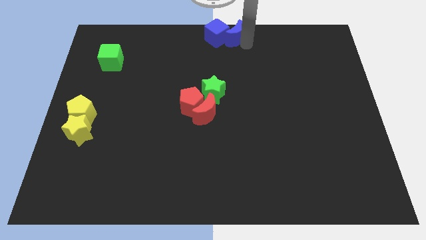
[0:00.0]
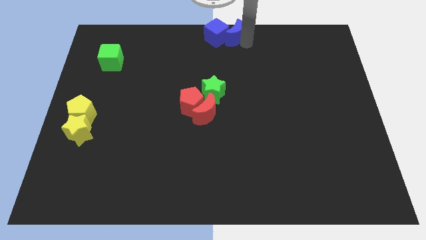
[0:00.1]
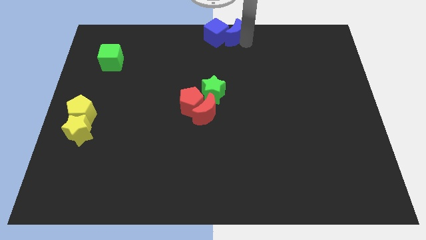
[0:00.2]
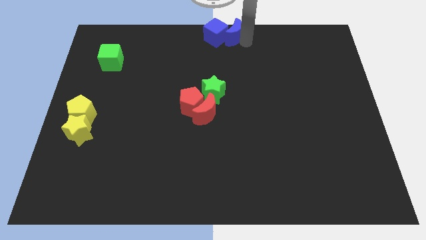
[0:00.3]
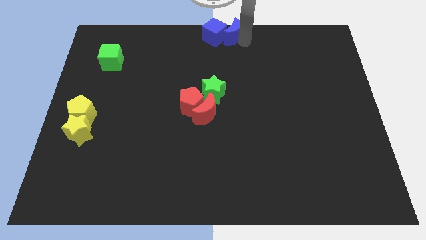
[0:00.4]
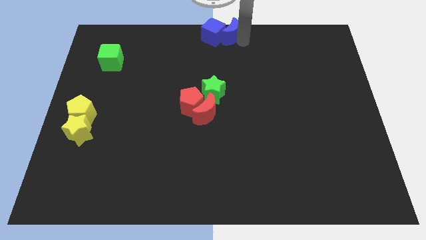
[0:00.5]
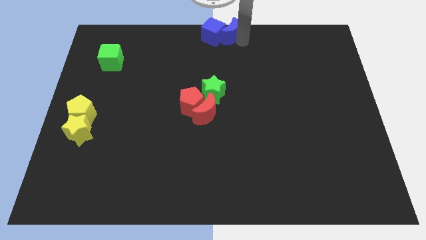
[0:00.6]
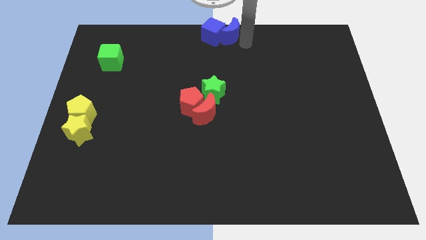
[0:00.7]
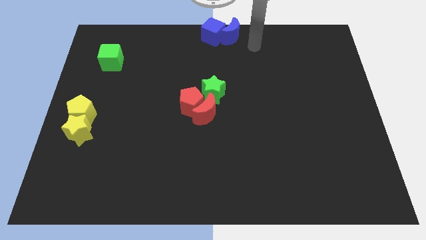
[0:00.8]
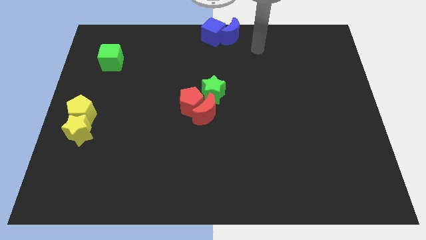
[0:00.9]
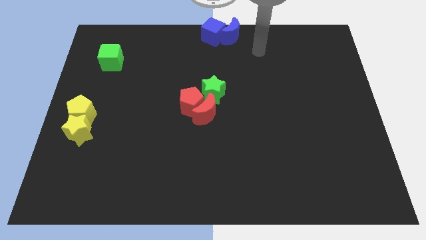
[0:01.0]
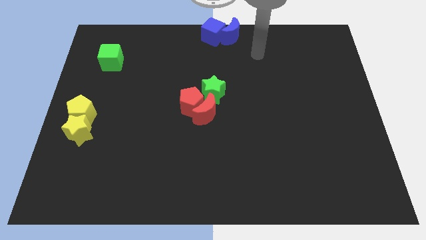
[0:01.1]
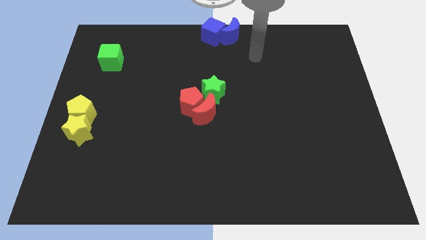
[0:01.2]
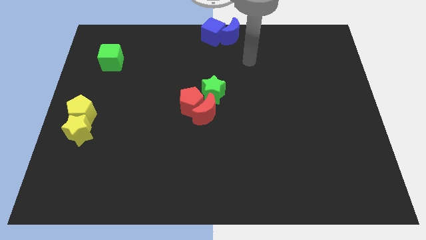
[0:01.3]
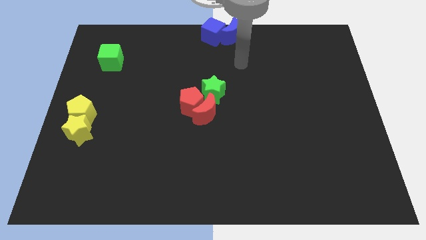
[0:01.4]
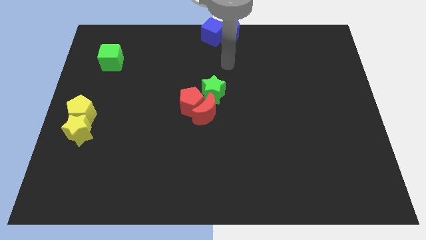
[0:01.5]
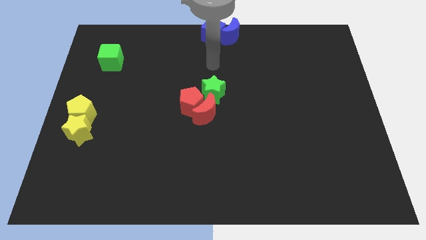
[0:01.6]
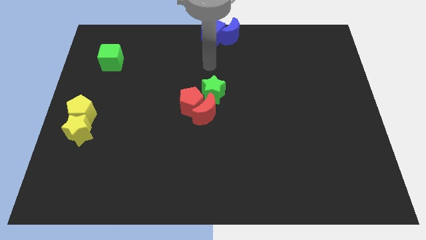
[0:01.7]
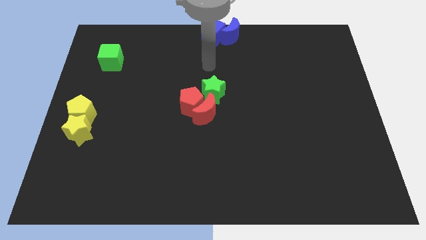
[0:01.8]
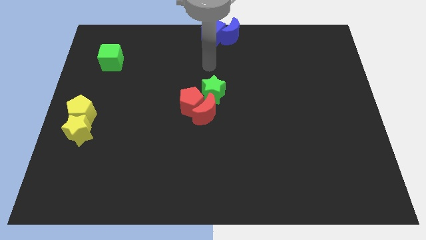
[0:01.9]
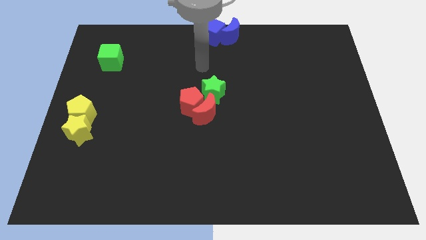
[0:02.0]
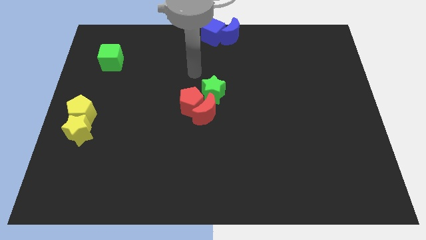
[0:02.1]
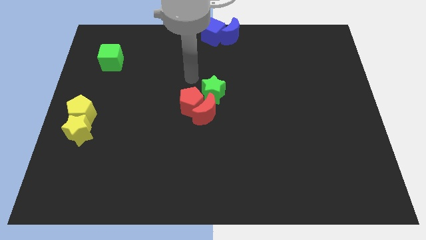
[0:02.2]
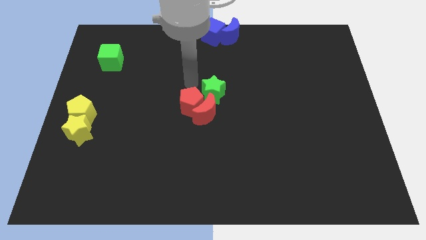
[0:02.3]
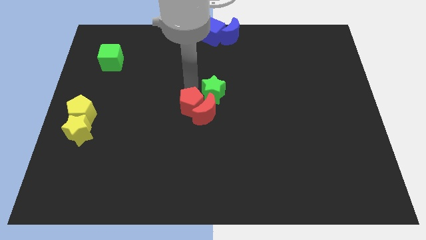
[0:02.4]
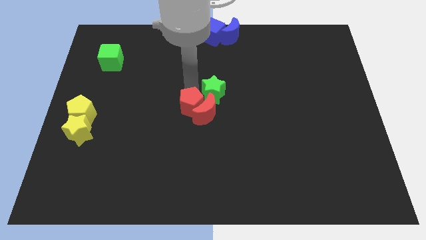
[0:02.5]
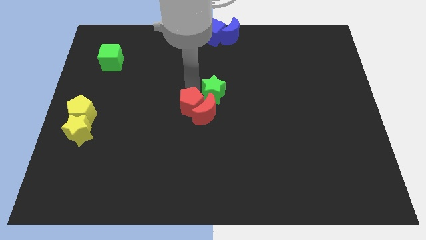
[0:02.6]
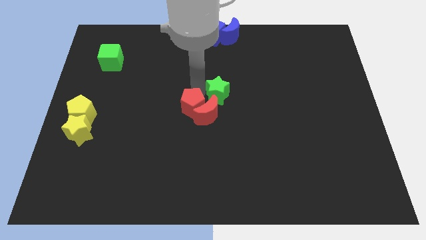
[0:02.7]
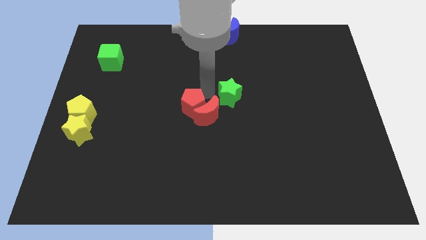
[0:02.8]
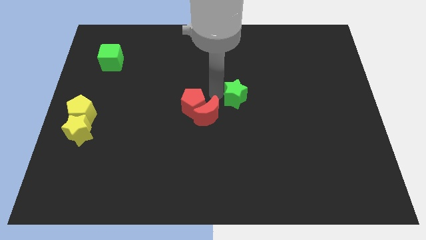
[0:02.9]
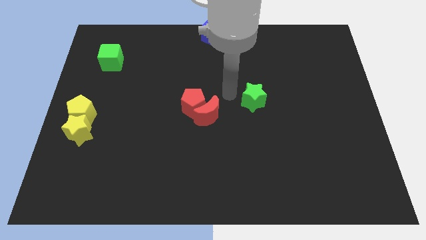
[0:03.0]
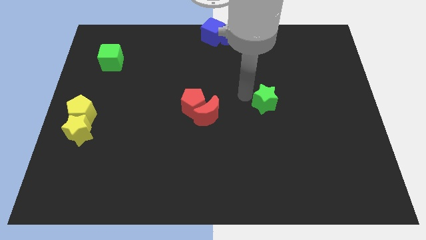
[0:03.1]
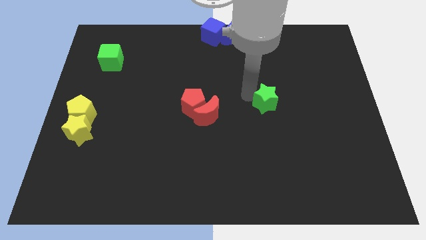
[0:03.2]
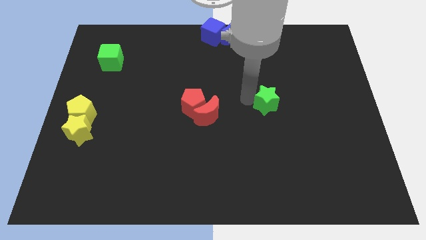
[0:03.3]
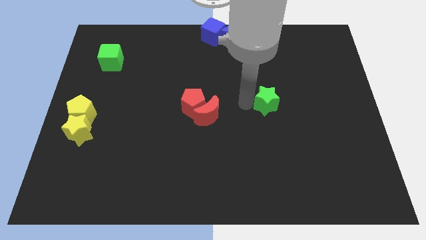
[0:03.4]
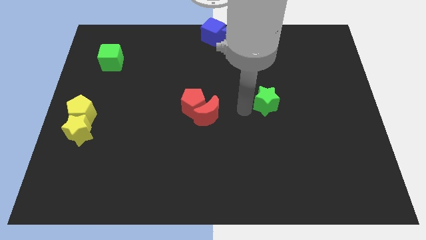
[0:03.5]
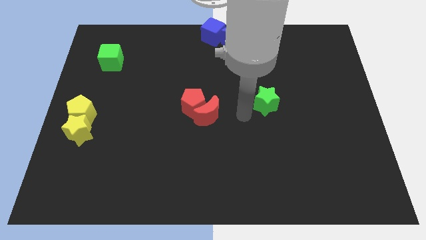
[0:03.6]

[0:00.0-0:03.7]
move the green star away from the red blocks

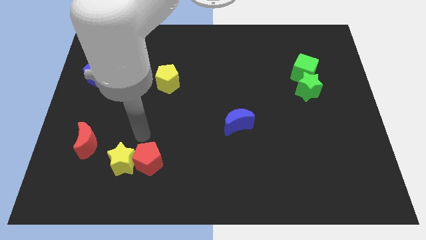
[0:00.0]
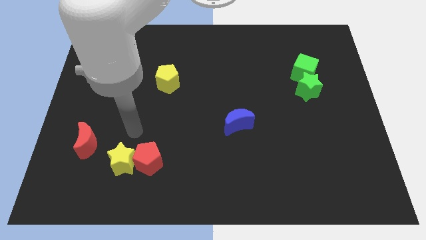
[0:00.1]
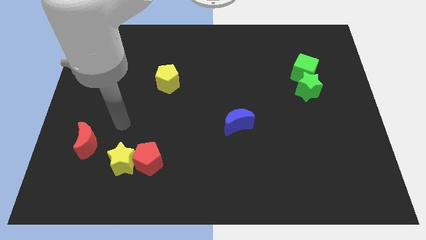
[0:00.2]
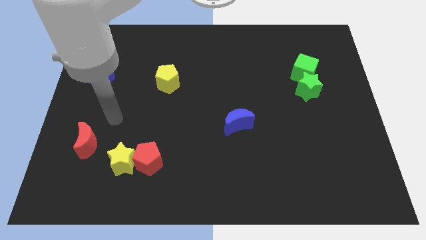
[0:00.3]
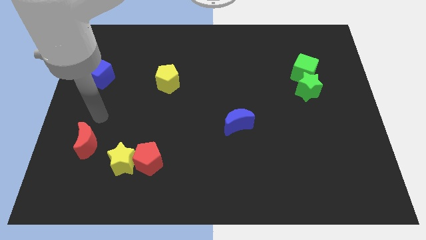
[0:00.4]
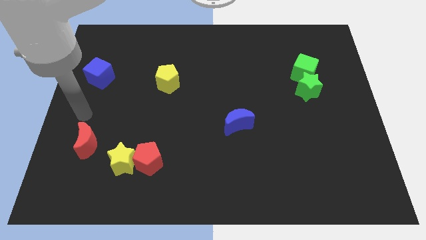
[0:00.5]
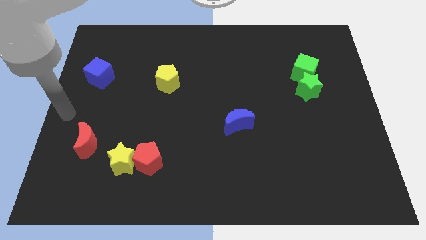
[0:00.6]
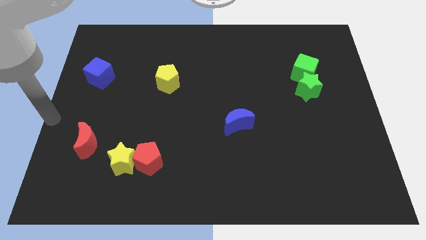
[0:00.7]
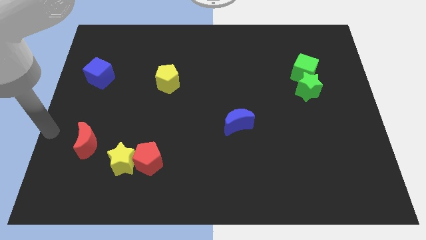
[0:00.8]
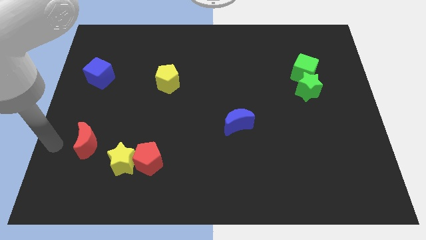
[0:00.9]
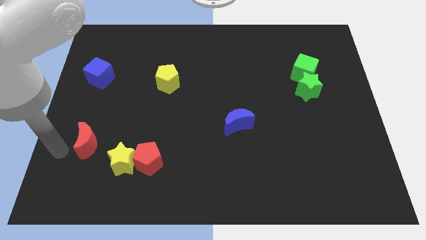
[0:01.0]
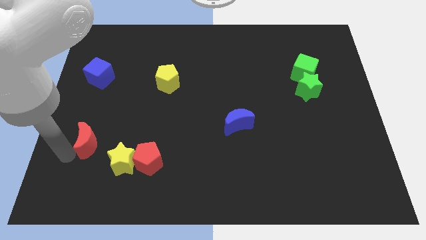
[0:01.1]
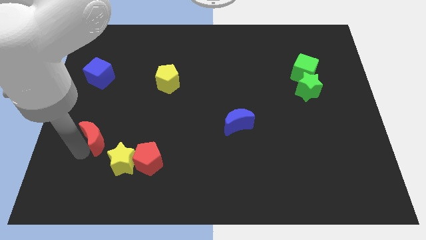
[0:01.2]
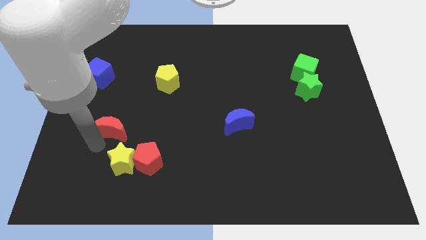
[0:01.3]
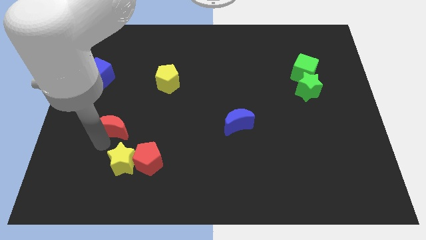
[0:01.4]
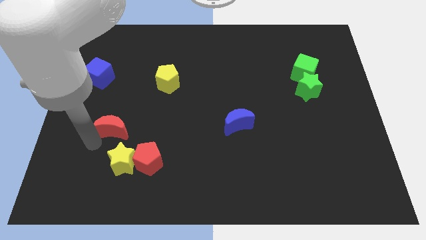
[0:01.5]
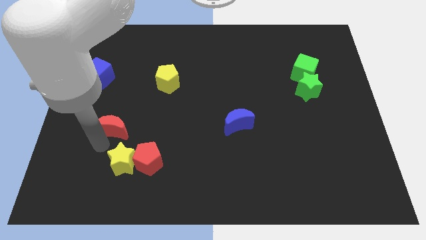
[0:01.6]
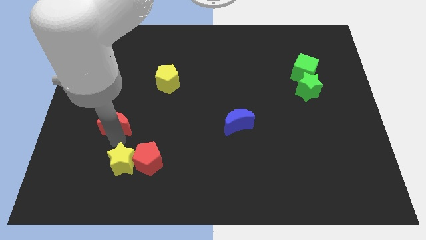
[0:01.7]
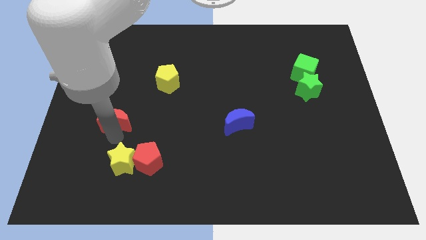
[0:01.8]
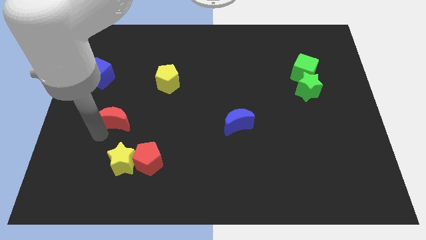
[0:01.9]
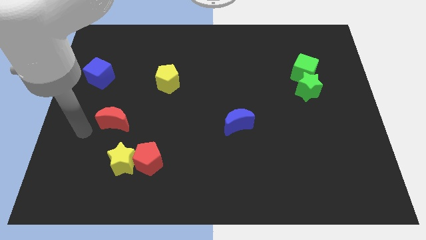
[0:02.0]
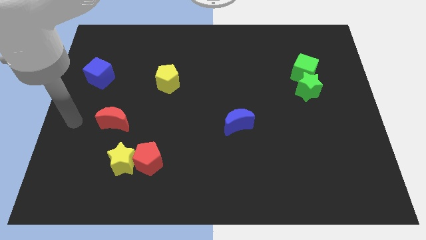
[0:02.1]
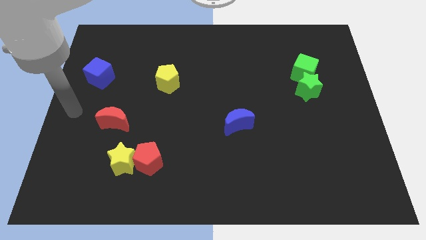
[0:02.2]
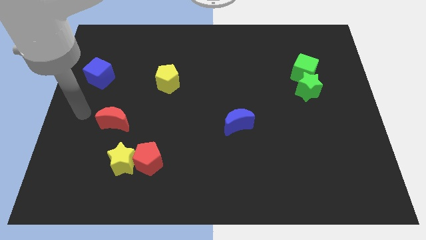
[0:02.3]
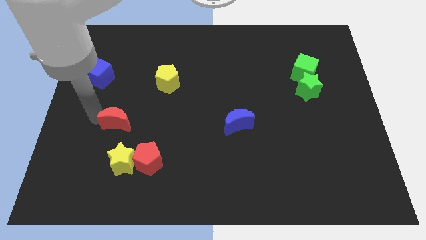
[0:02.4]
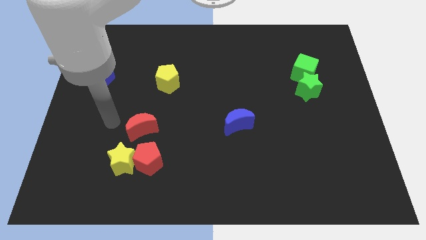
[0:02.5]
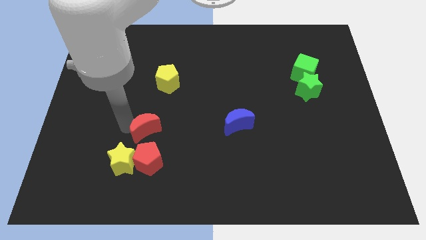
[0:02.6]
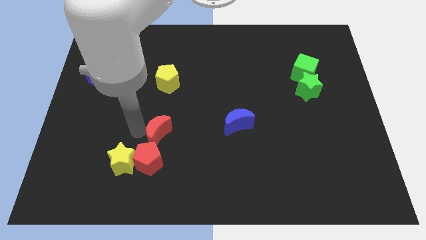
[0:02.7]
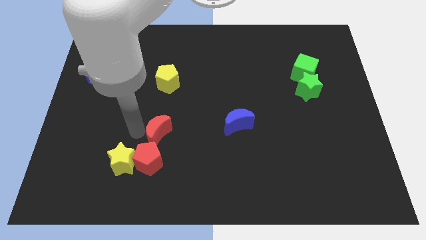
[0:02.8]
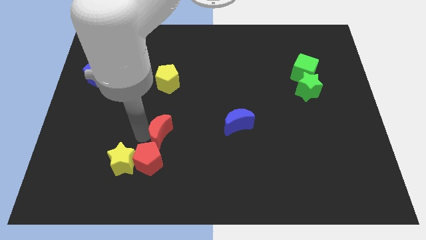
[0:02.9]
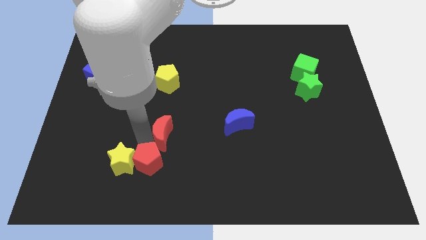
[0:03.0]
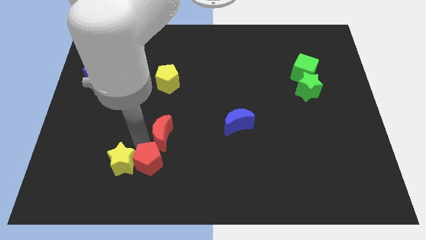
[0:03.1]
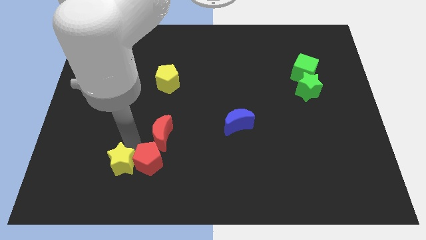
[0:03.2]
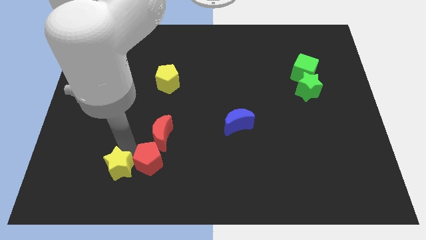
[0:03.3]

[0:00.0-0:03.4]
put the red crescent close to the red pentagon

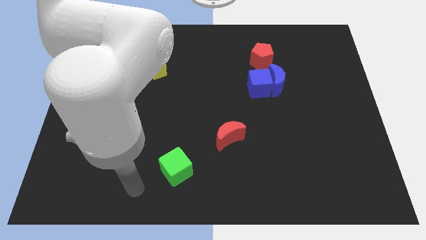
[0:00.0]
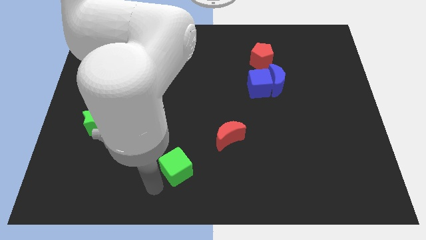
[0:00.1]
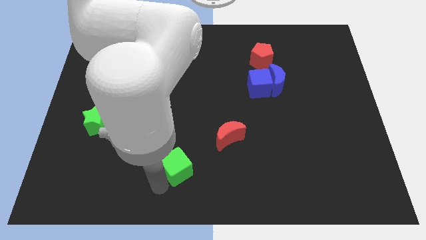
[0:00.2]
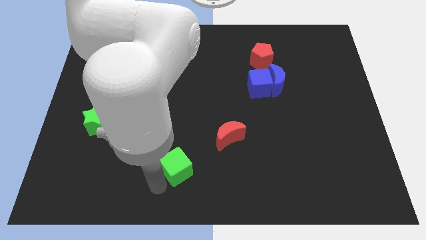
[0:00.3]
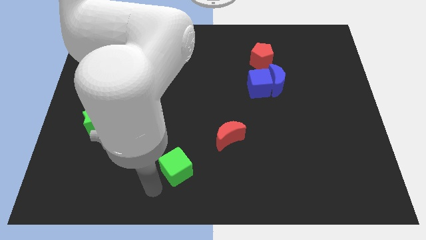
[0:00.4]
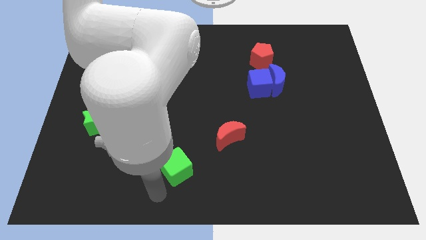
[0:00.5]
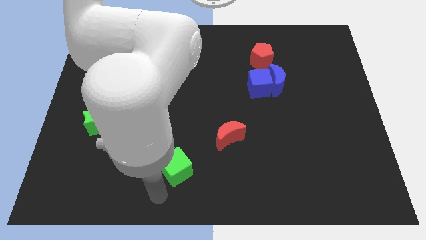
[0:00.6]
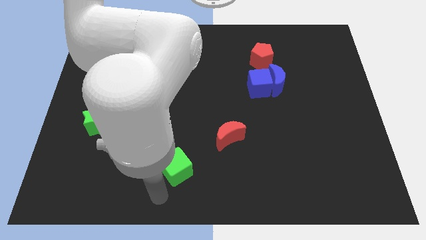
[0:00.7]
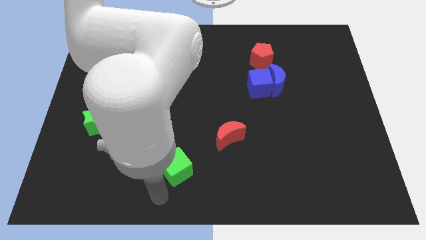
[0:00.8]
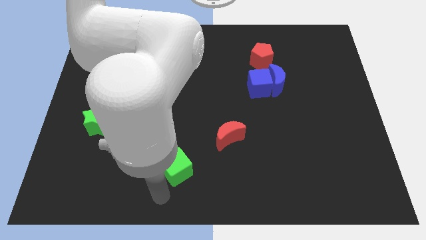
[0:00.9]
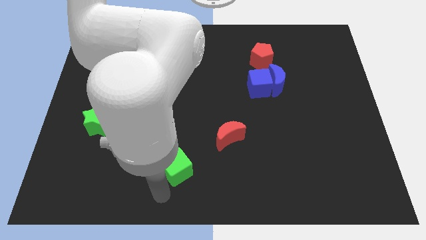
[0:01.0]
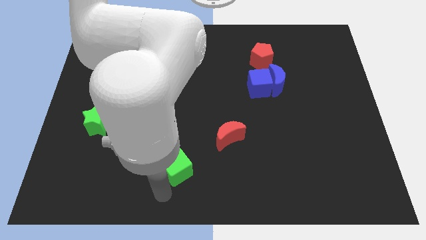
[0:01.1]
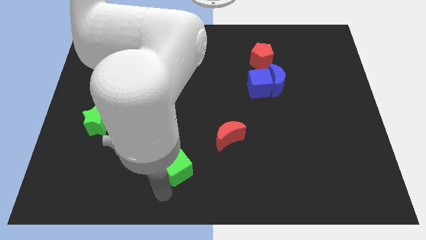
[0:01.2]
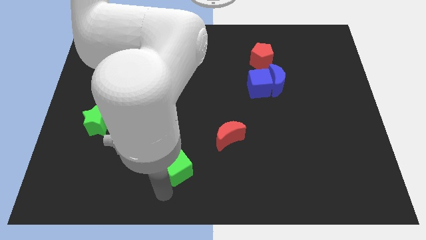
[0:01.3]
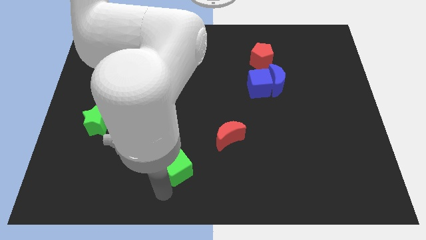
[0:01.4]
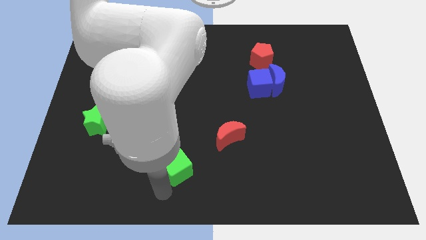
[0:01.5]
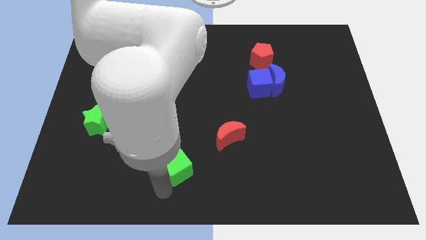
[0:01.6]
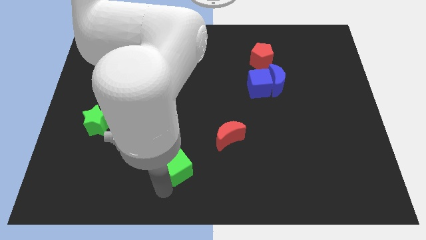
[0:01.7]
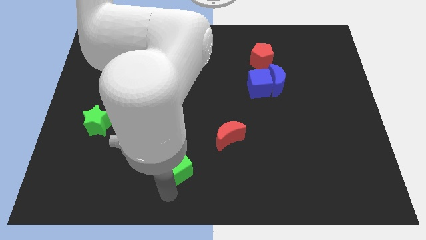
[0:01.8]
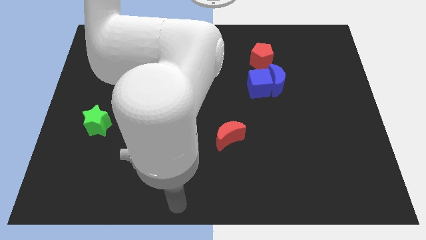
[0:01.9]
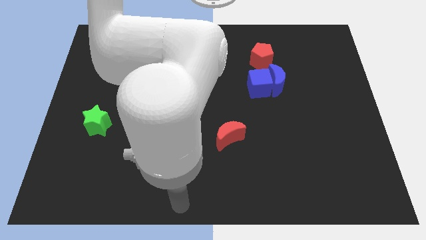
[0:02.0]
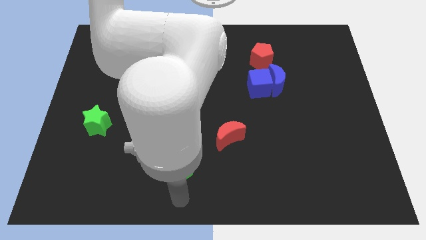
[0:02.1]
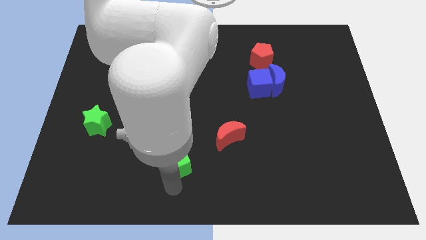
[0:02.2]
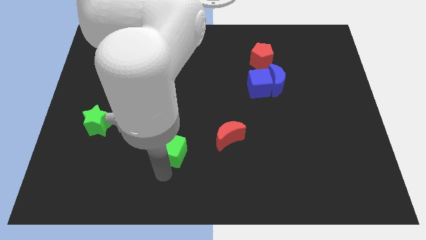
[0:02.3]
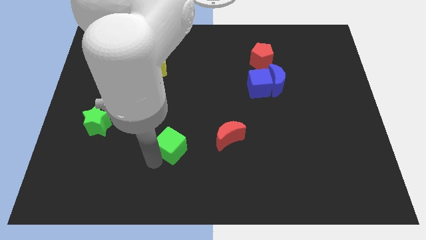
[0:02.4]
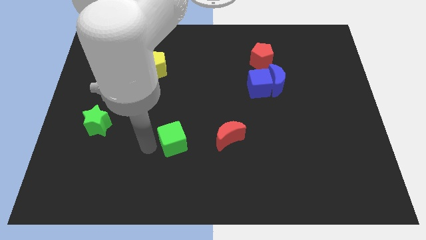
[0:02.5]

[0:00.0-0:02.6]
push the green cube to the left of the red crescent
